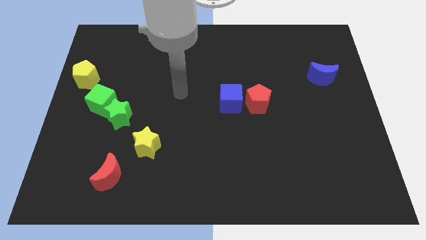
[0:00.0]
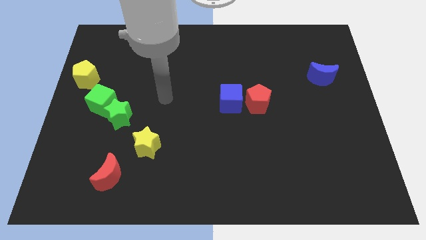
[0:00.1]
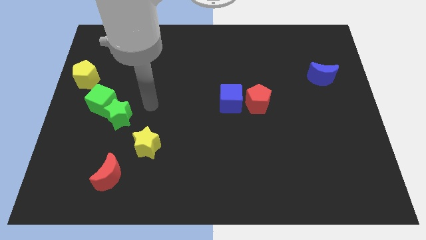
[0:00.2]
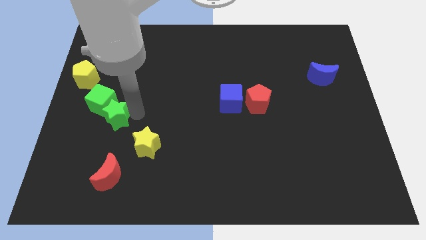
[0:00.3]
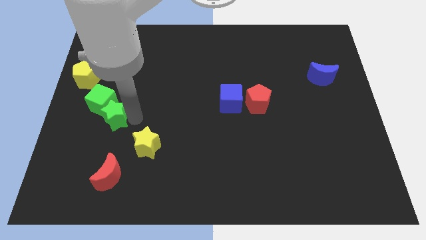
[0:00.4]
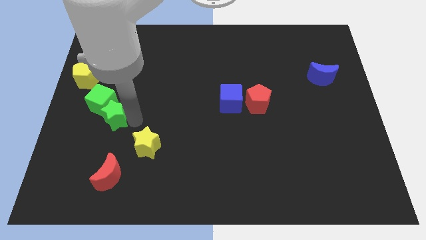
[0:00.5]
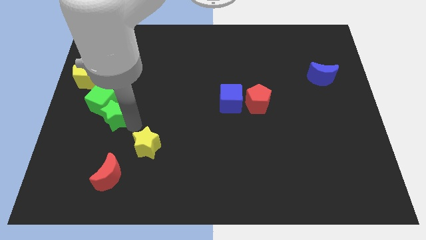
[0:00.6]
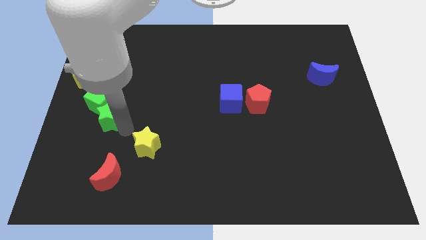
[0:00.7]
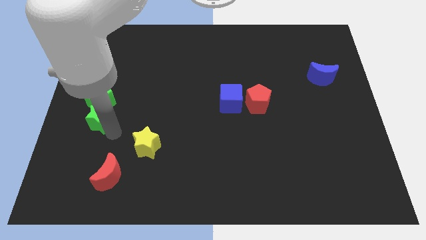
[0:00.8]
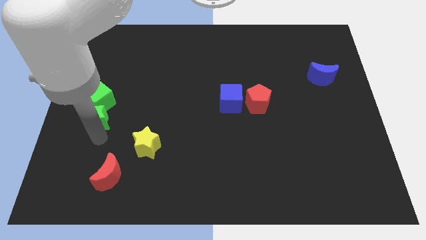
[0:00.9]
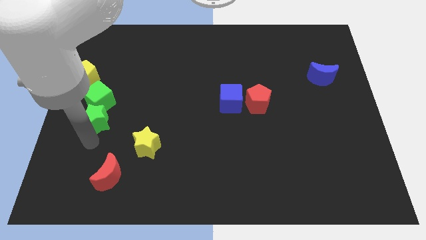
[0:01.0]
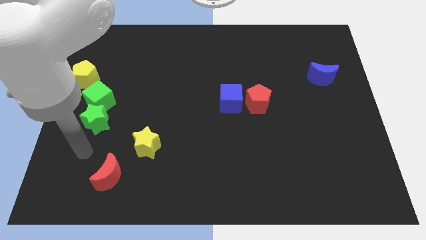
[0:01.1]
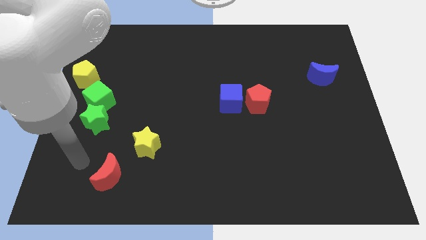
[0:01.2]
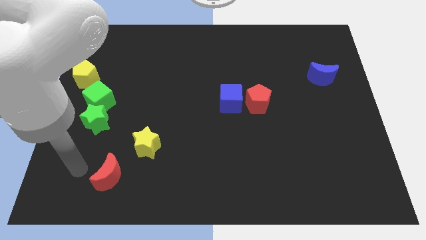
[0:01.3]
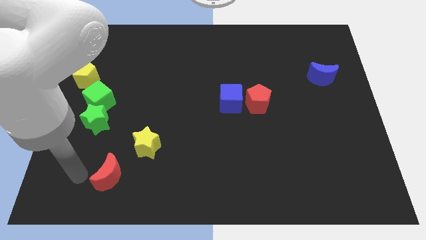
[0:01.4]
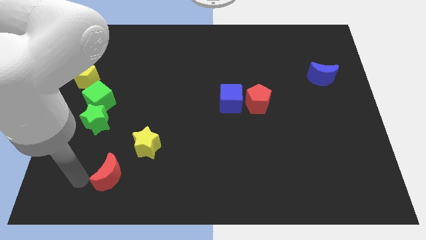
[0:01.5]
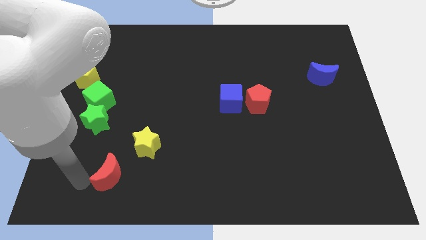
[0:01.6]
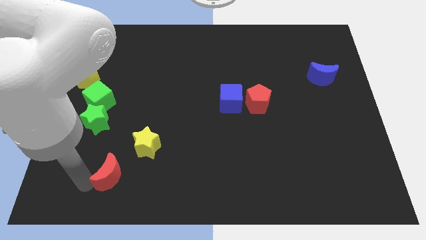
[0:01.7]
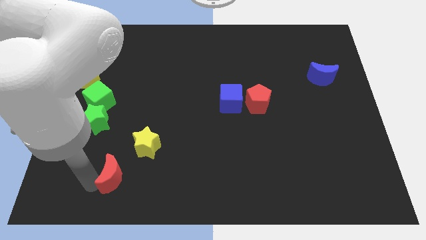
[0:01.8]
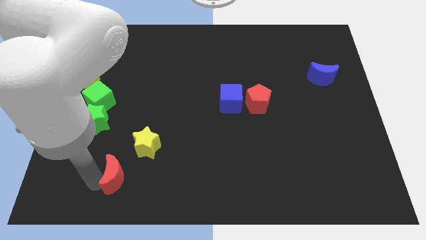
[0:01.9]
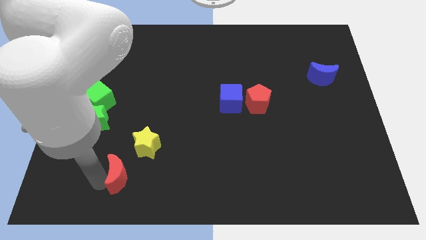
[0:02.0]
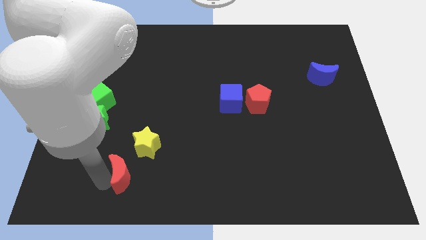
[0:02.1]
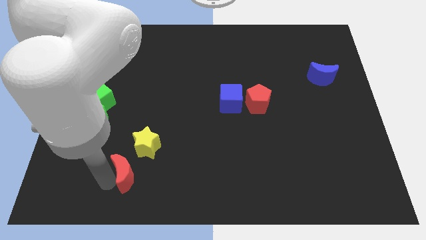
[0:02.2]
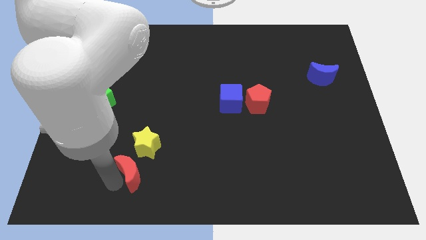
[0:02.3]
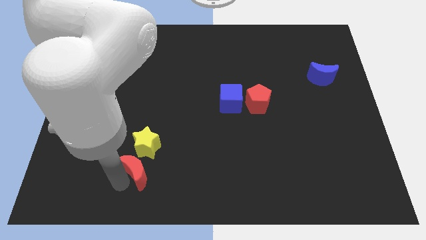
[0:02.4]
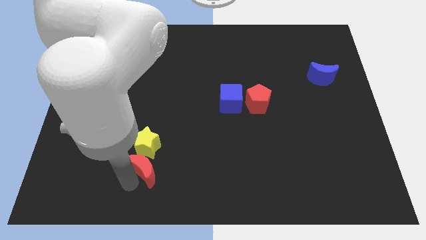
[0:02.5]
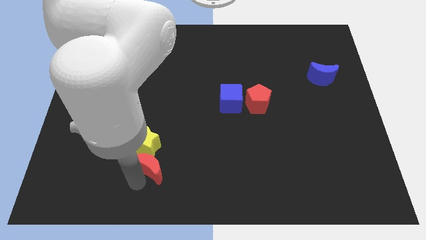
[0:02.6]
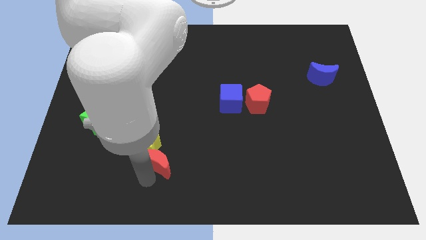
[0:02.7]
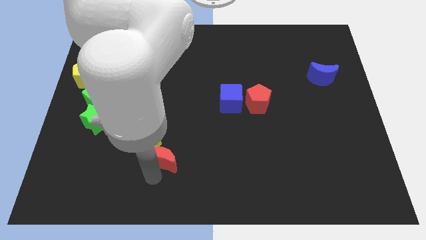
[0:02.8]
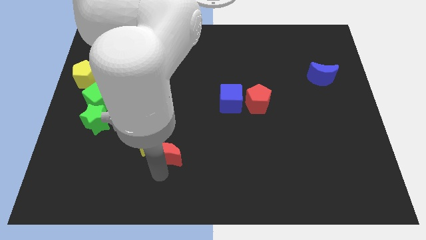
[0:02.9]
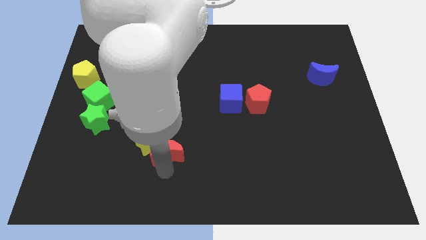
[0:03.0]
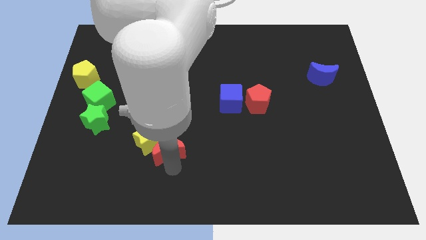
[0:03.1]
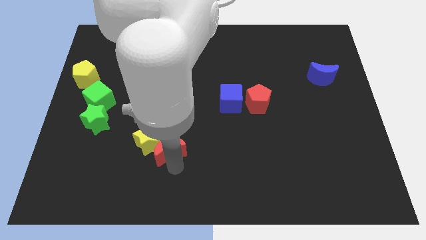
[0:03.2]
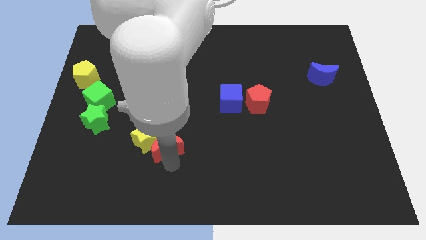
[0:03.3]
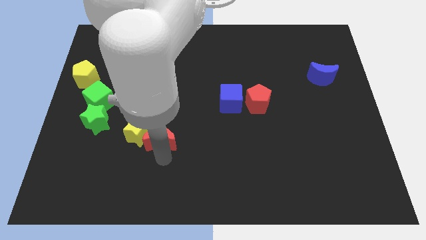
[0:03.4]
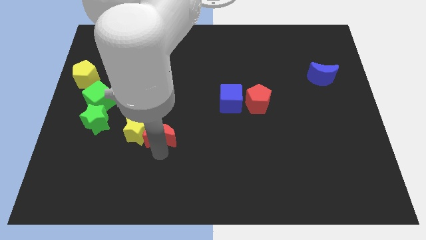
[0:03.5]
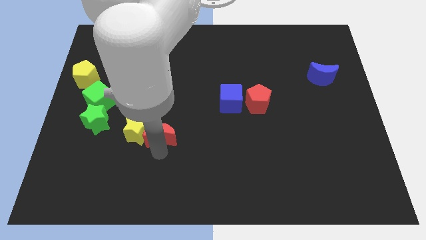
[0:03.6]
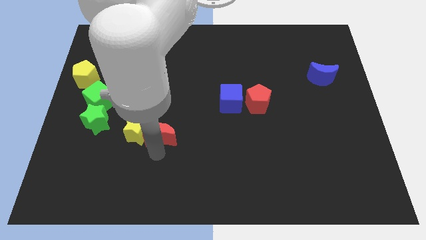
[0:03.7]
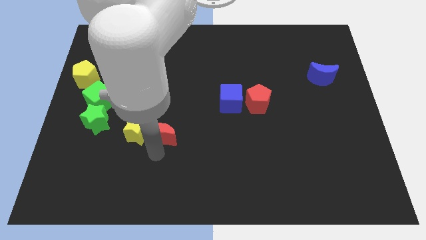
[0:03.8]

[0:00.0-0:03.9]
push red crescent into the yellow star

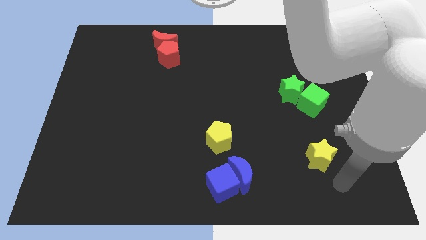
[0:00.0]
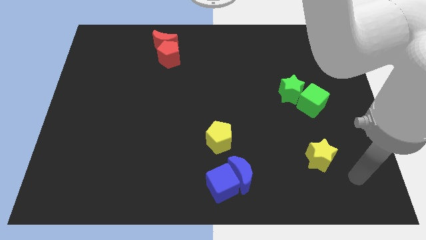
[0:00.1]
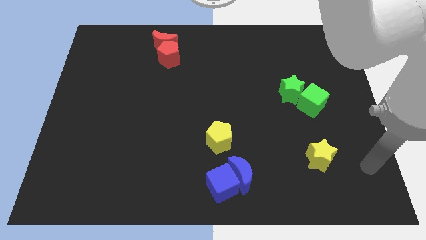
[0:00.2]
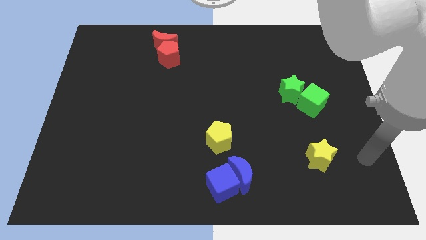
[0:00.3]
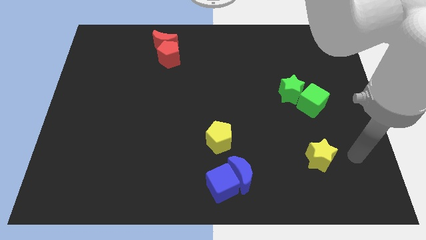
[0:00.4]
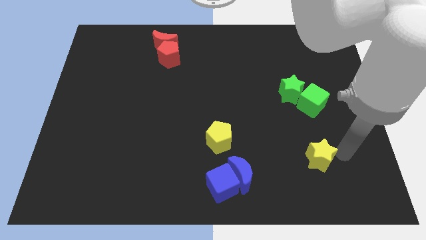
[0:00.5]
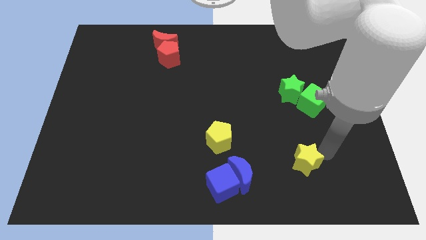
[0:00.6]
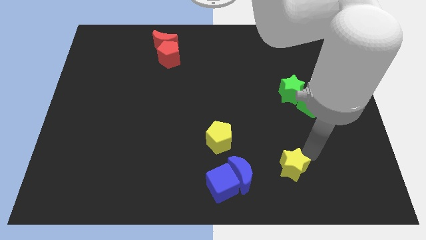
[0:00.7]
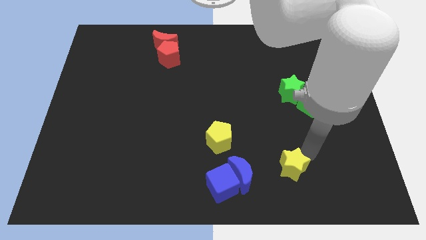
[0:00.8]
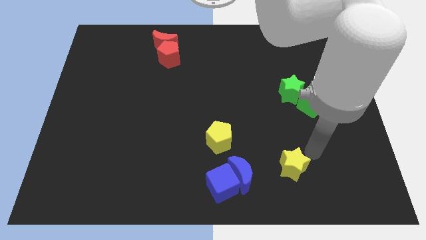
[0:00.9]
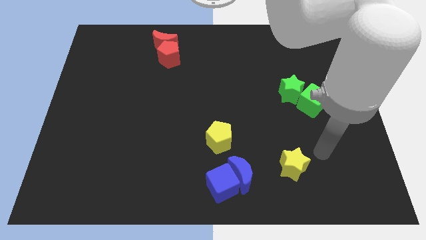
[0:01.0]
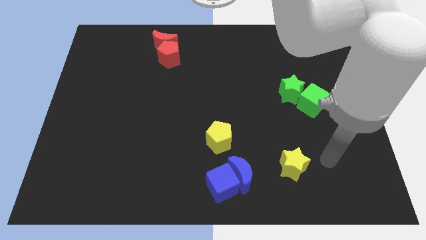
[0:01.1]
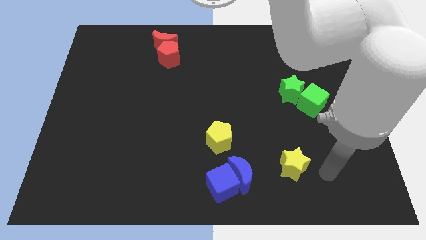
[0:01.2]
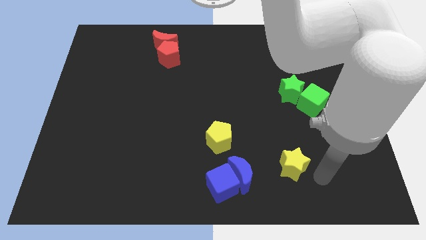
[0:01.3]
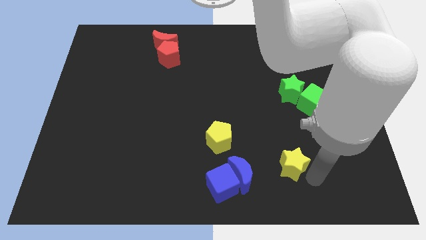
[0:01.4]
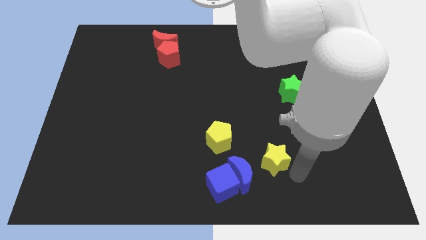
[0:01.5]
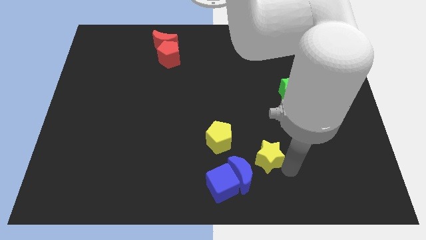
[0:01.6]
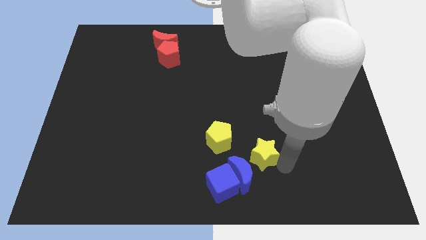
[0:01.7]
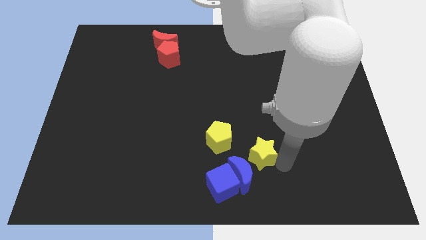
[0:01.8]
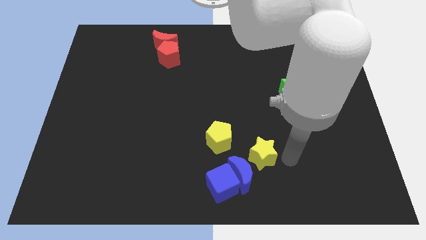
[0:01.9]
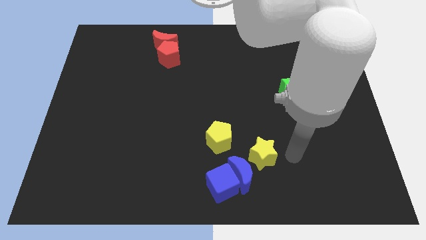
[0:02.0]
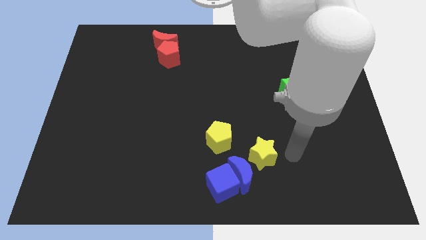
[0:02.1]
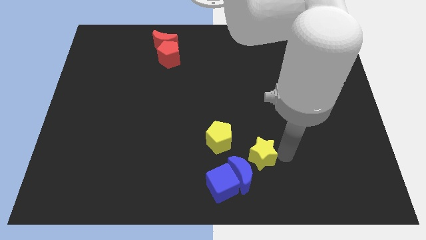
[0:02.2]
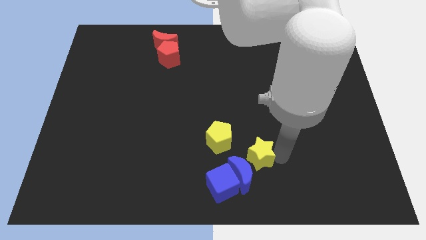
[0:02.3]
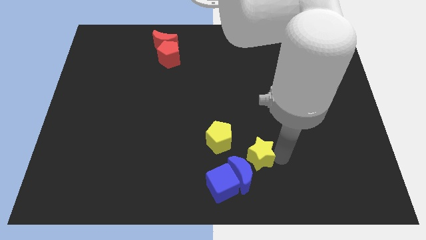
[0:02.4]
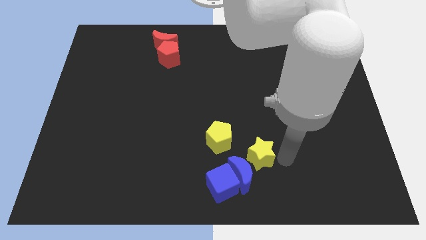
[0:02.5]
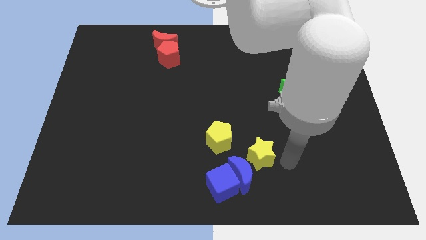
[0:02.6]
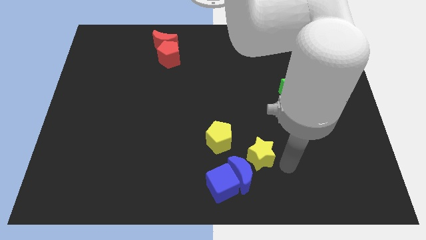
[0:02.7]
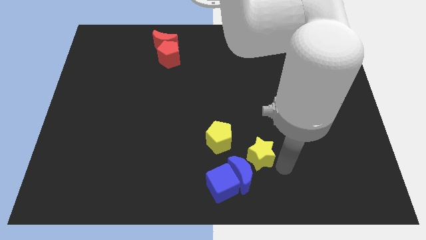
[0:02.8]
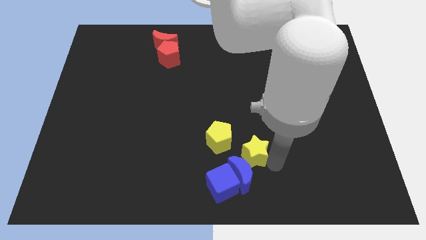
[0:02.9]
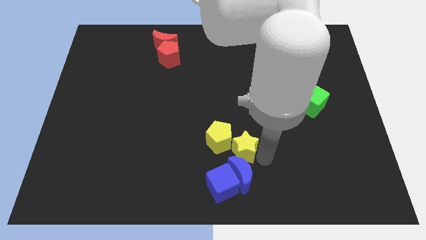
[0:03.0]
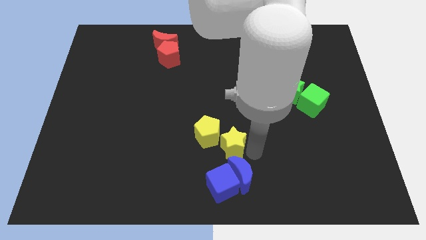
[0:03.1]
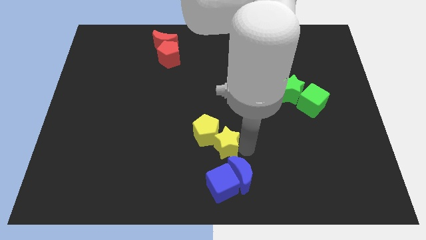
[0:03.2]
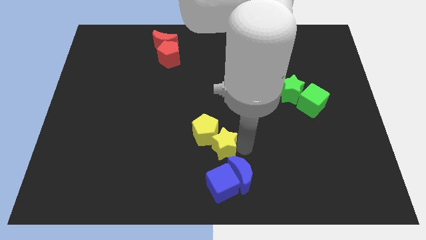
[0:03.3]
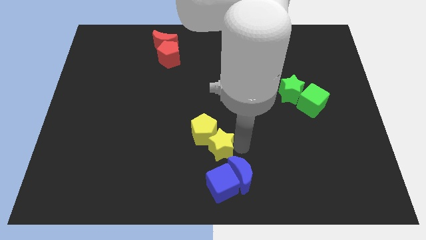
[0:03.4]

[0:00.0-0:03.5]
push the yellow star into the yellow pentagon

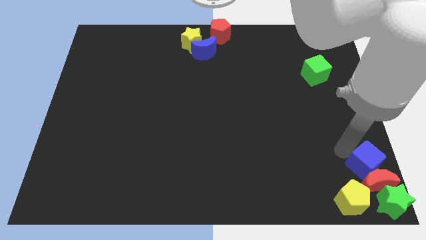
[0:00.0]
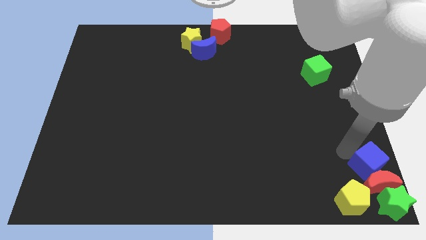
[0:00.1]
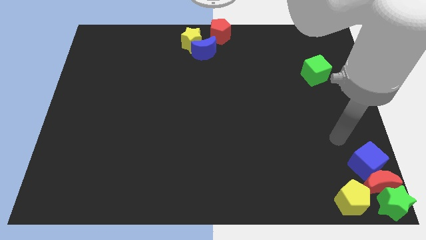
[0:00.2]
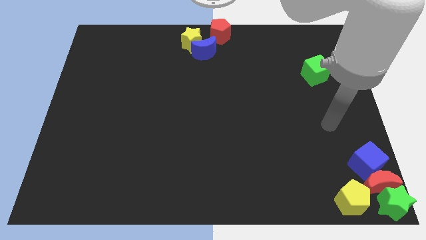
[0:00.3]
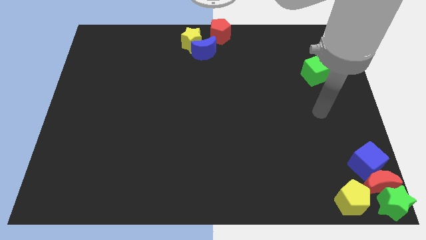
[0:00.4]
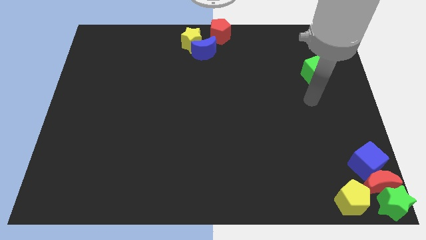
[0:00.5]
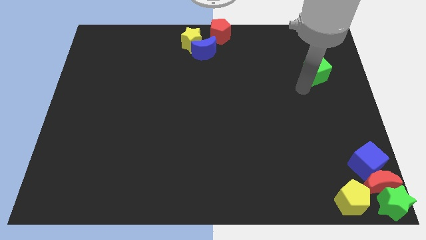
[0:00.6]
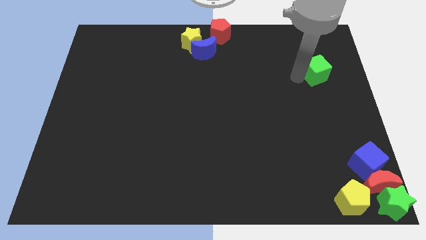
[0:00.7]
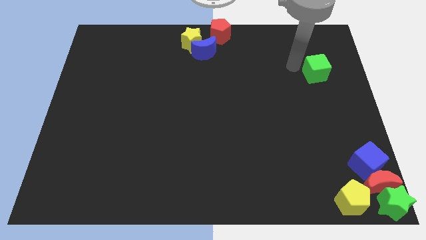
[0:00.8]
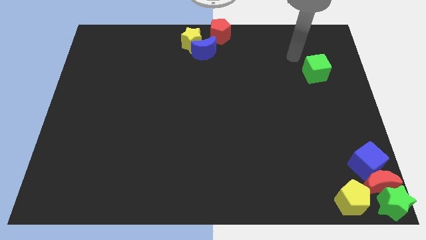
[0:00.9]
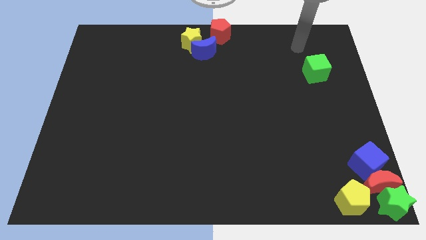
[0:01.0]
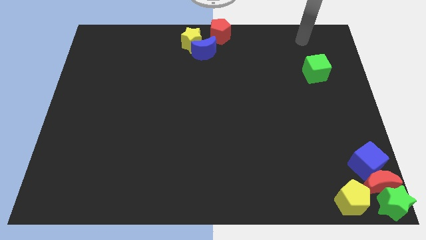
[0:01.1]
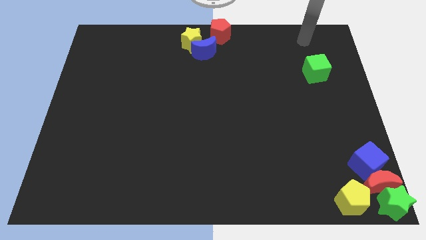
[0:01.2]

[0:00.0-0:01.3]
move the arm away from the blue cube

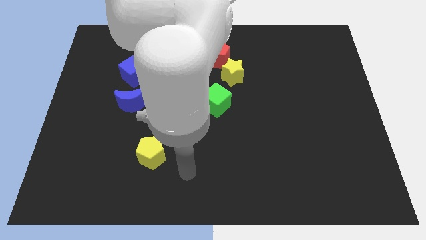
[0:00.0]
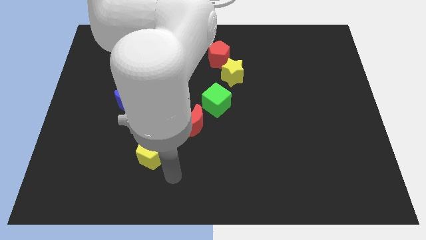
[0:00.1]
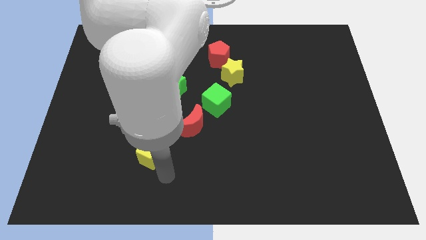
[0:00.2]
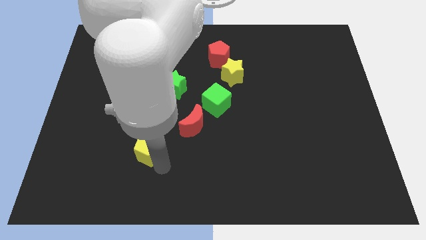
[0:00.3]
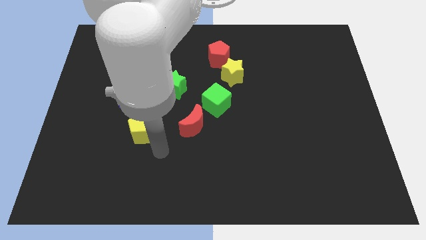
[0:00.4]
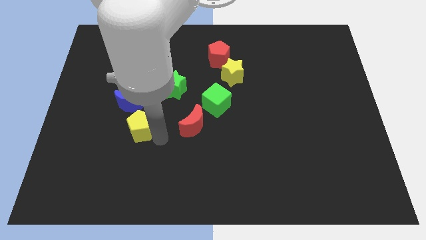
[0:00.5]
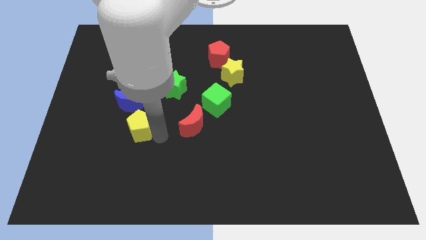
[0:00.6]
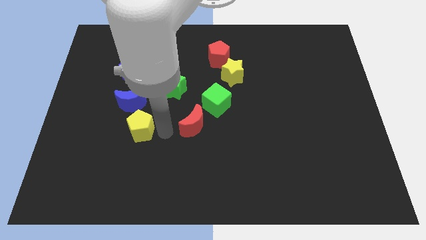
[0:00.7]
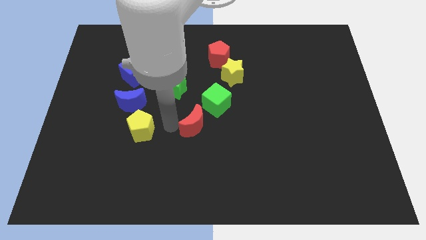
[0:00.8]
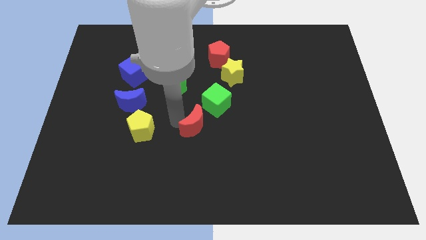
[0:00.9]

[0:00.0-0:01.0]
move the yellow pentagon below the blue crescent
